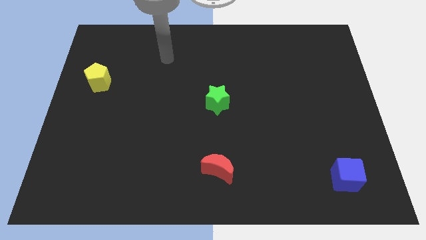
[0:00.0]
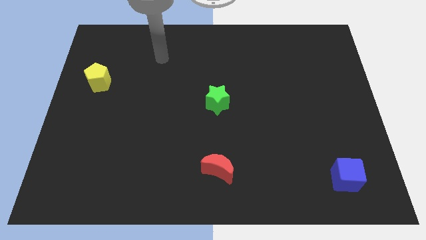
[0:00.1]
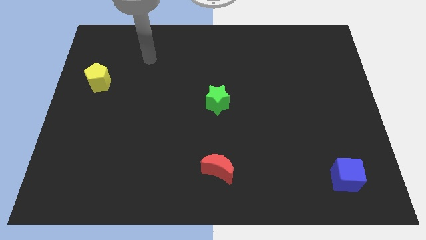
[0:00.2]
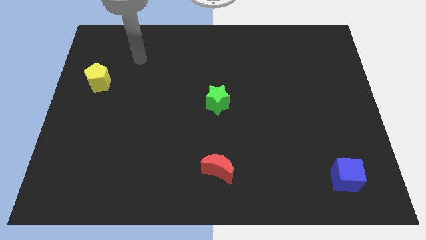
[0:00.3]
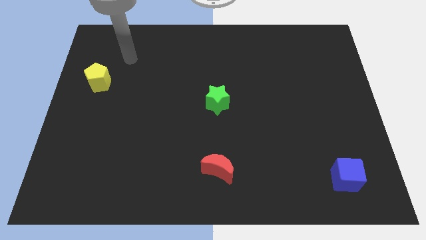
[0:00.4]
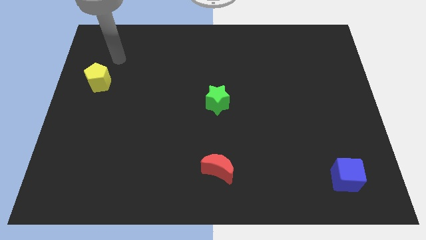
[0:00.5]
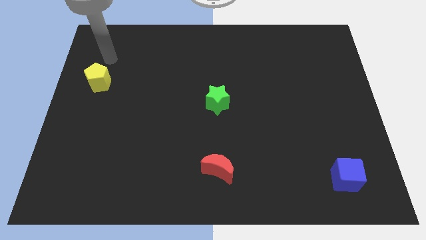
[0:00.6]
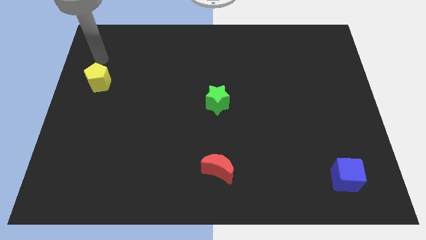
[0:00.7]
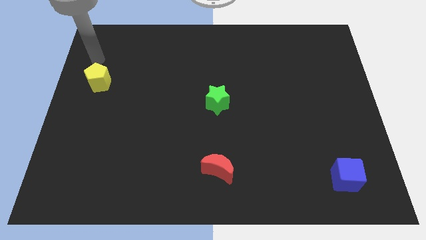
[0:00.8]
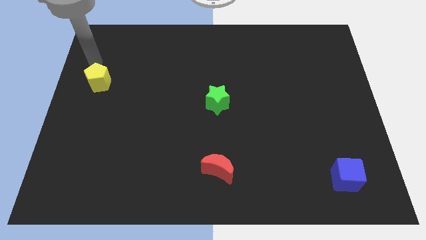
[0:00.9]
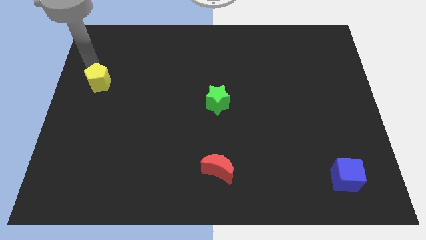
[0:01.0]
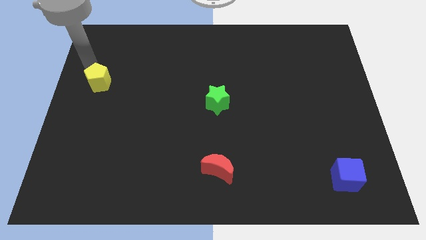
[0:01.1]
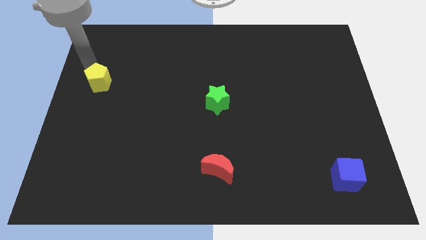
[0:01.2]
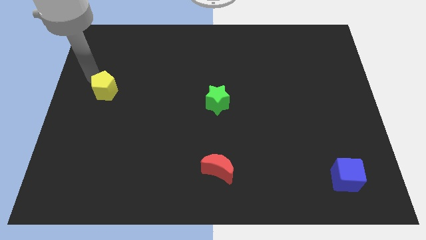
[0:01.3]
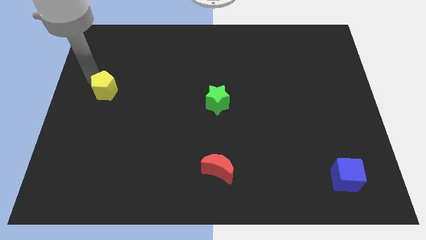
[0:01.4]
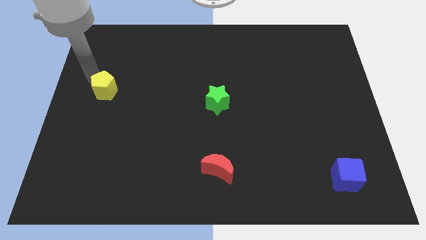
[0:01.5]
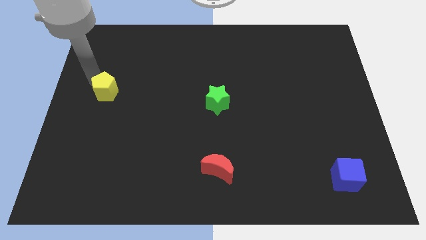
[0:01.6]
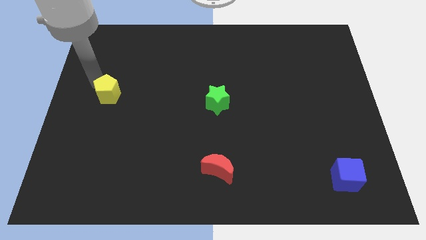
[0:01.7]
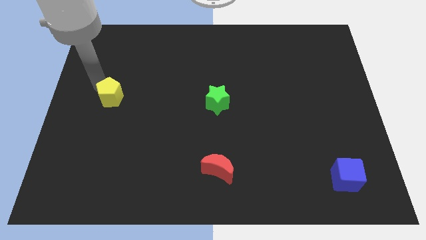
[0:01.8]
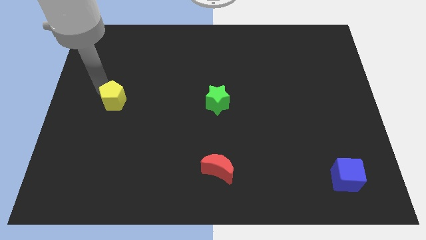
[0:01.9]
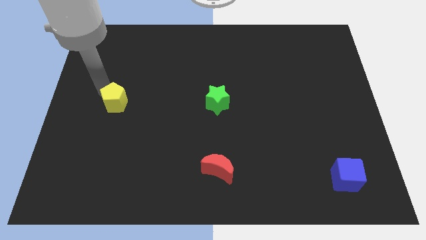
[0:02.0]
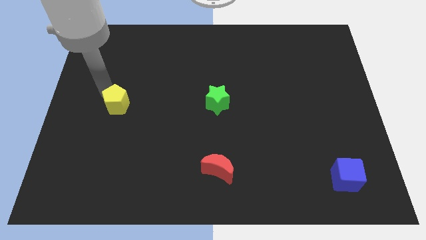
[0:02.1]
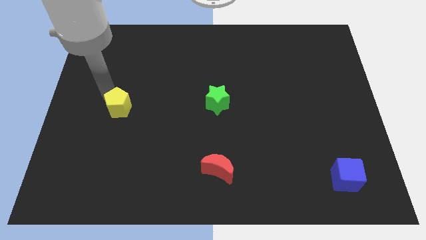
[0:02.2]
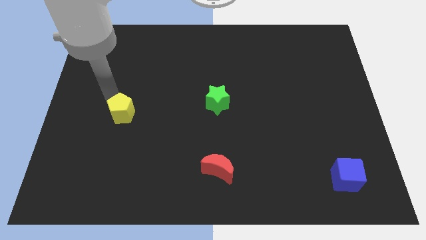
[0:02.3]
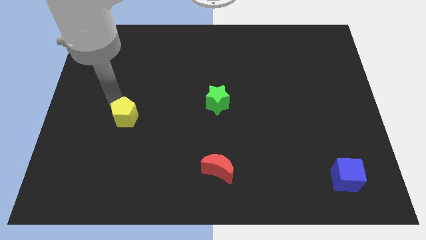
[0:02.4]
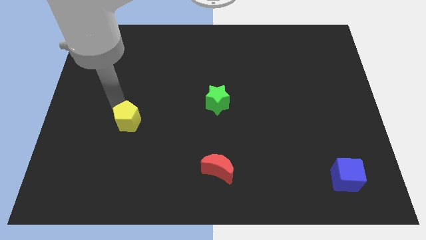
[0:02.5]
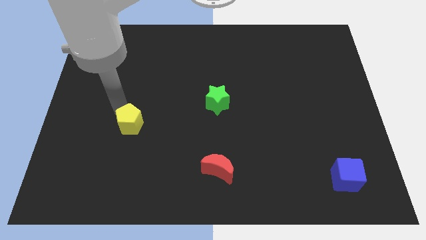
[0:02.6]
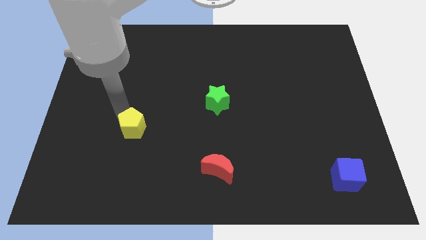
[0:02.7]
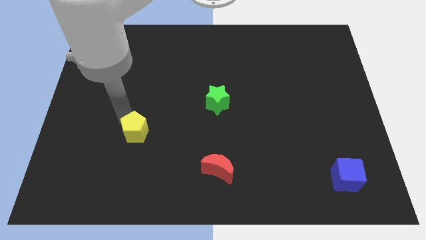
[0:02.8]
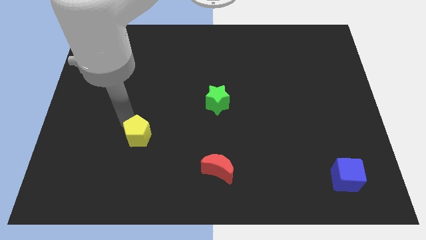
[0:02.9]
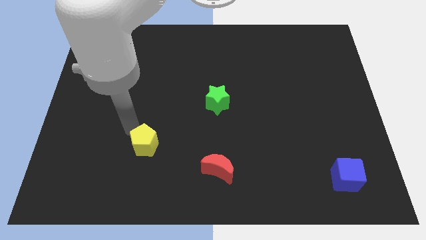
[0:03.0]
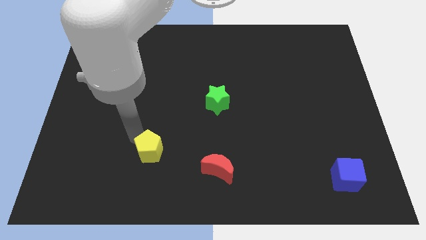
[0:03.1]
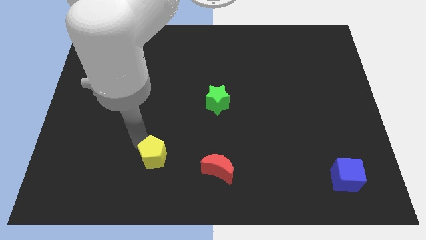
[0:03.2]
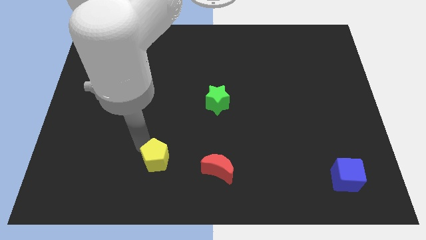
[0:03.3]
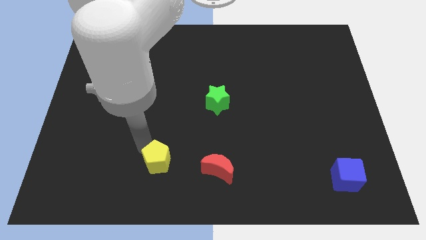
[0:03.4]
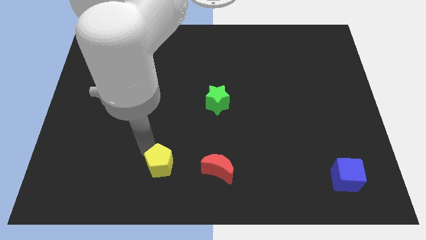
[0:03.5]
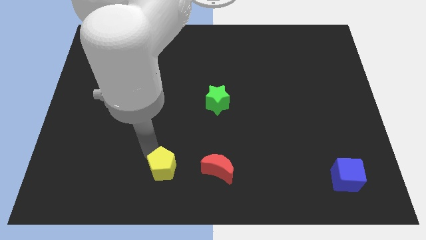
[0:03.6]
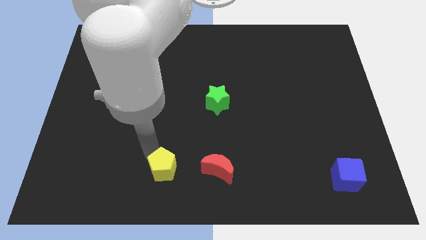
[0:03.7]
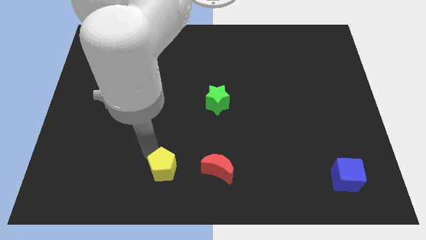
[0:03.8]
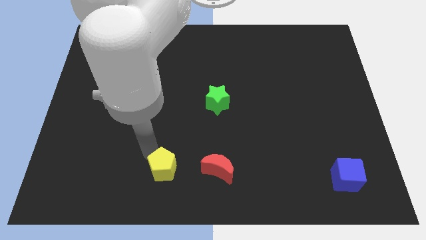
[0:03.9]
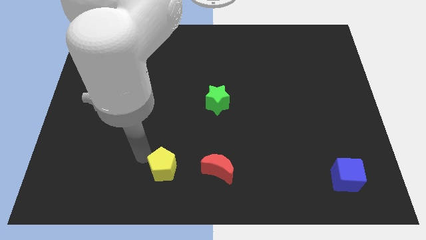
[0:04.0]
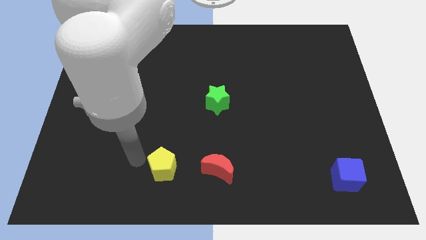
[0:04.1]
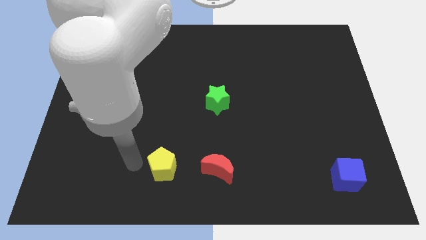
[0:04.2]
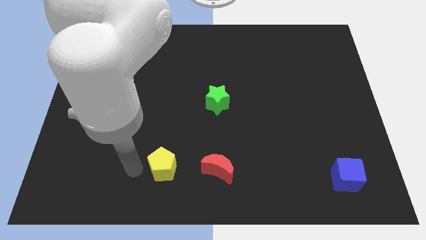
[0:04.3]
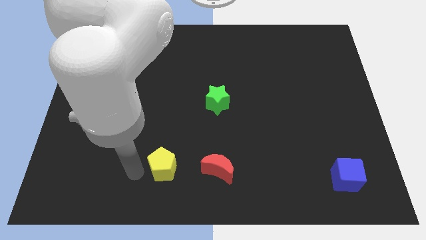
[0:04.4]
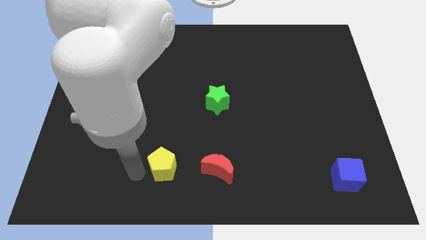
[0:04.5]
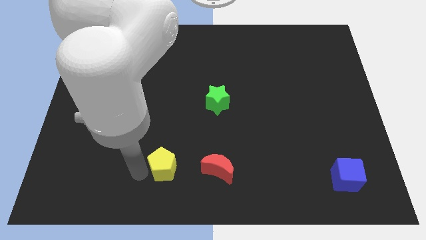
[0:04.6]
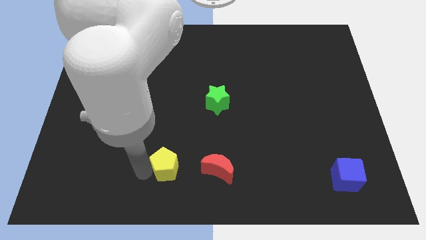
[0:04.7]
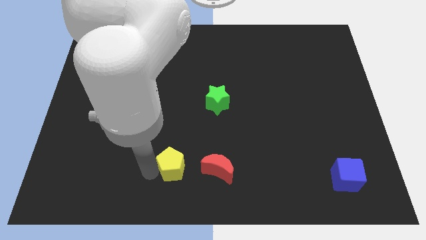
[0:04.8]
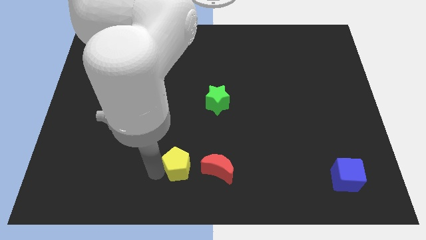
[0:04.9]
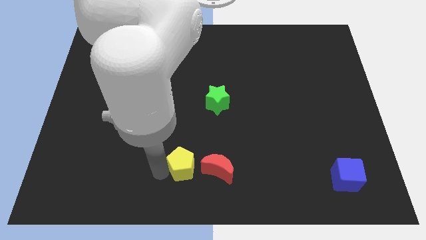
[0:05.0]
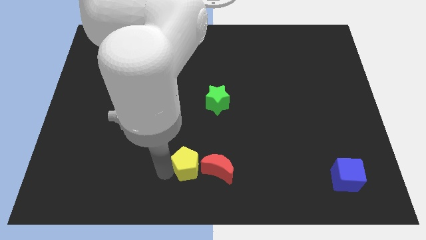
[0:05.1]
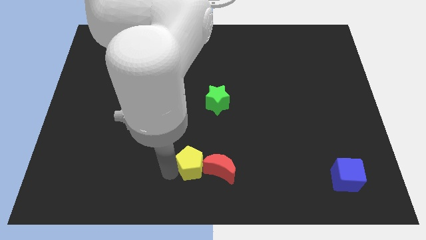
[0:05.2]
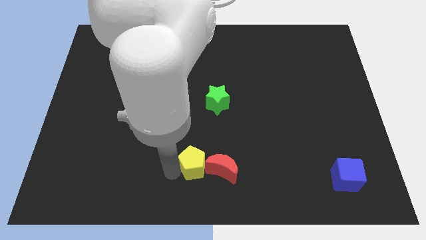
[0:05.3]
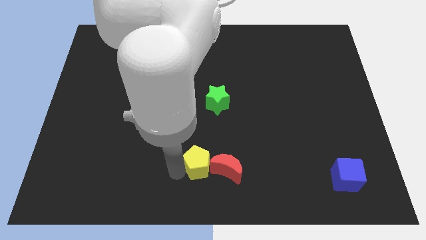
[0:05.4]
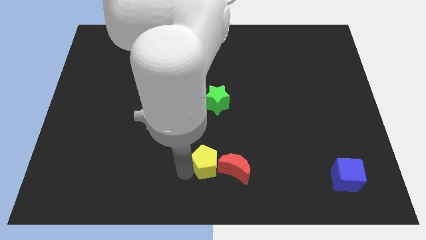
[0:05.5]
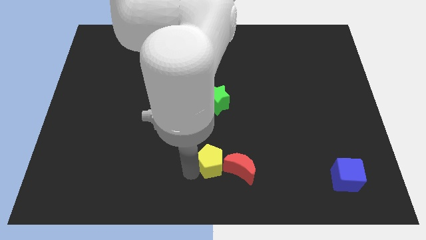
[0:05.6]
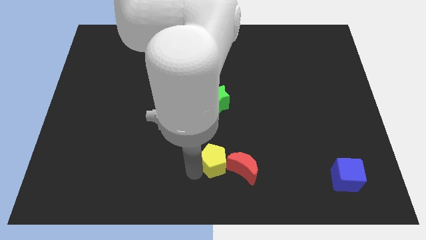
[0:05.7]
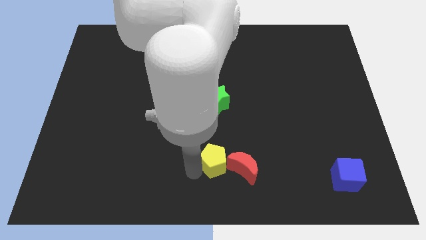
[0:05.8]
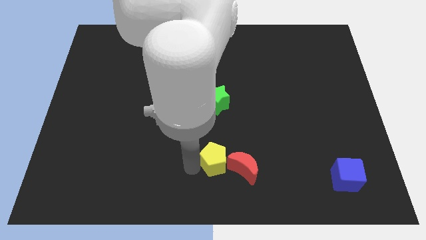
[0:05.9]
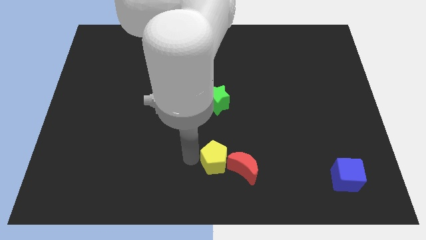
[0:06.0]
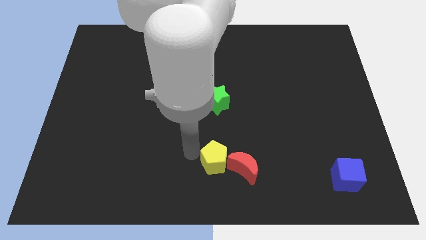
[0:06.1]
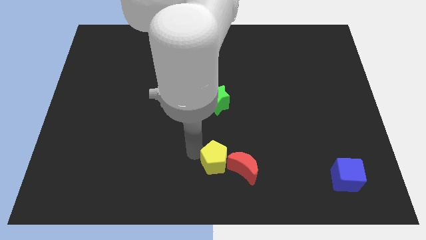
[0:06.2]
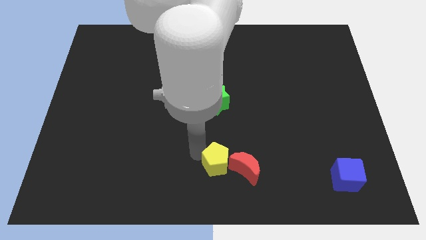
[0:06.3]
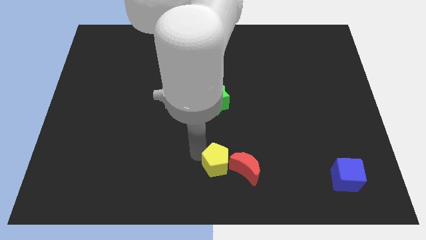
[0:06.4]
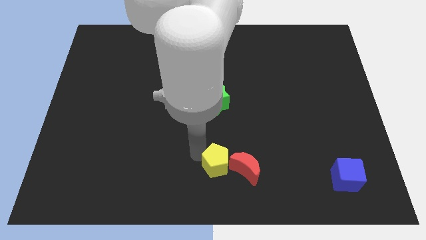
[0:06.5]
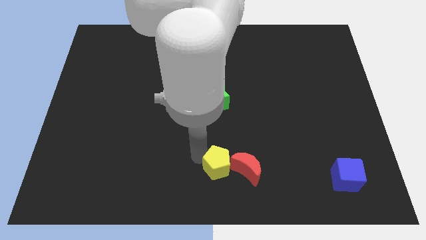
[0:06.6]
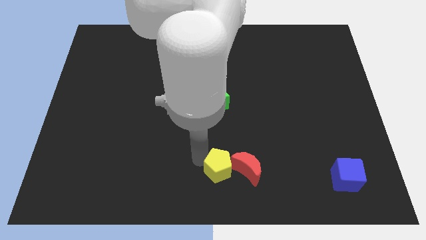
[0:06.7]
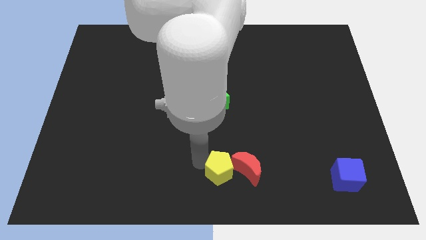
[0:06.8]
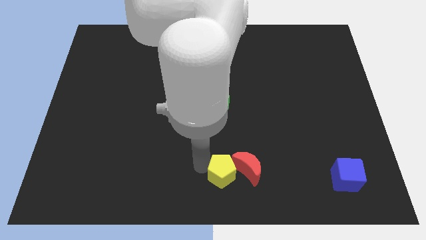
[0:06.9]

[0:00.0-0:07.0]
put the yellow pentagon towards the moon

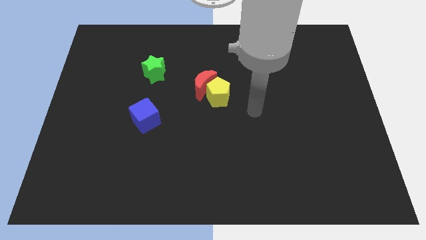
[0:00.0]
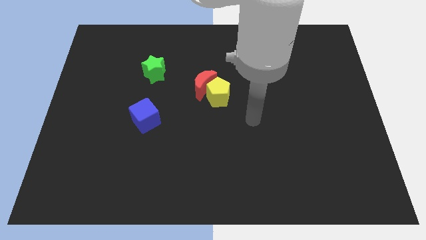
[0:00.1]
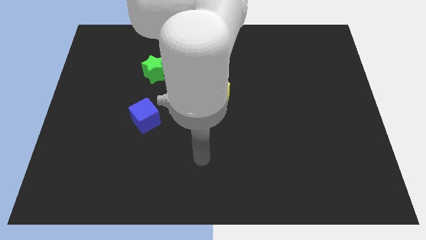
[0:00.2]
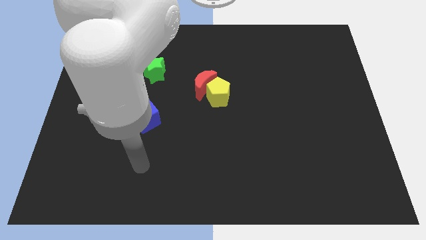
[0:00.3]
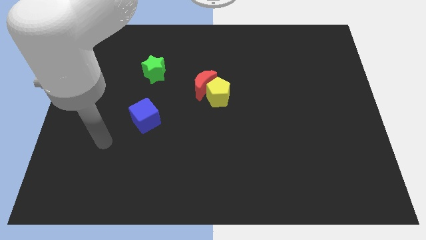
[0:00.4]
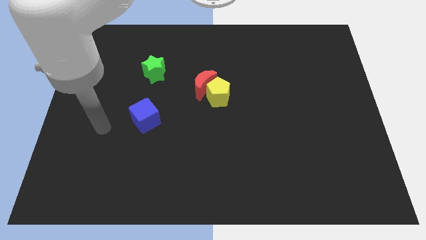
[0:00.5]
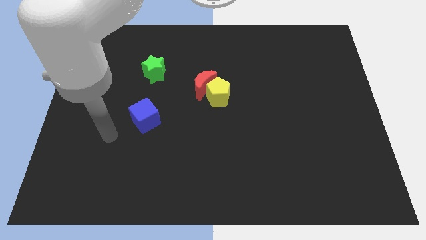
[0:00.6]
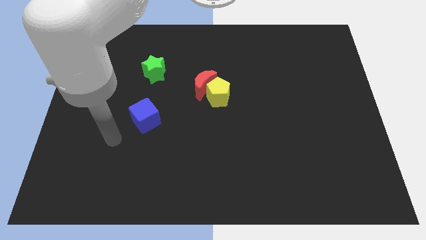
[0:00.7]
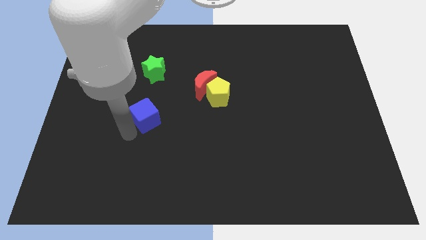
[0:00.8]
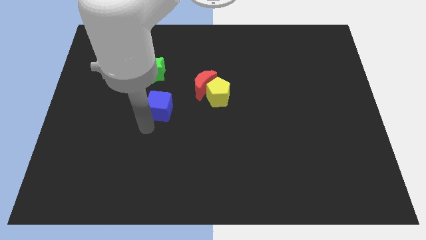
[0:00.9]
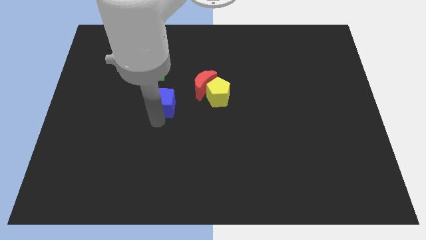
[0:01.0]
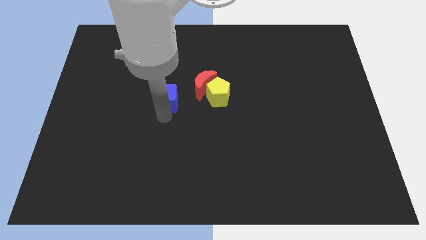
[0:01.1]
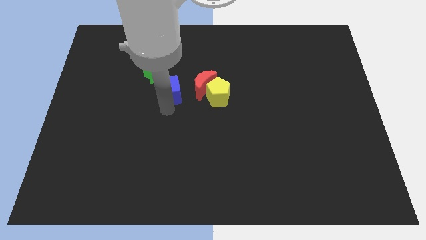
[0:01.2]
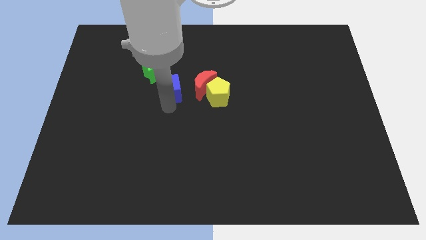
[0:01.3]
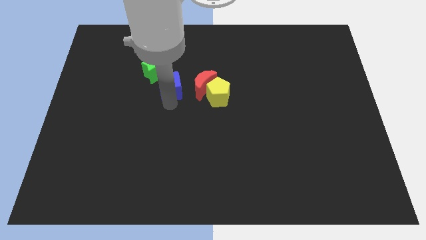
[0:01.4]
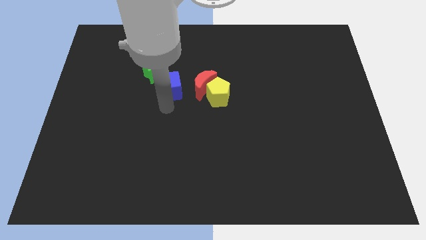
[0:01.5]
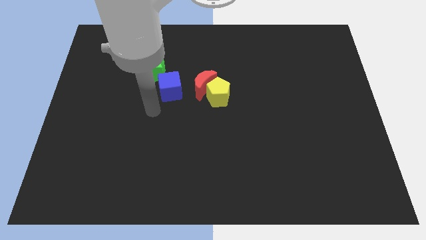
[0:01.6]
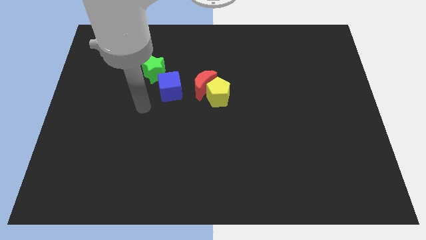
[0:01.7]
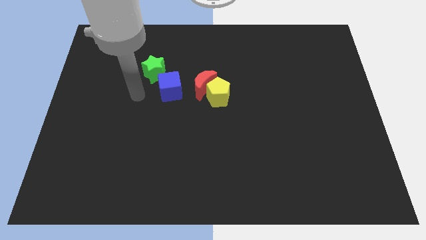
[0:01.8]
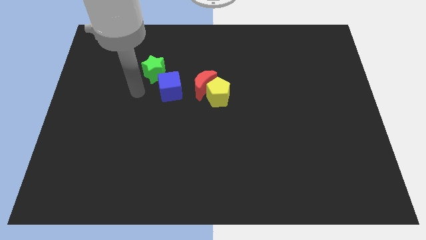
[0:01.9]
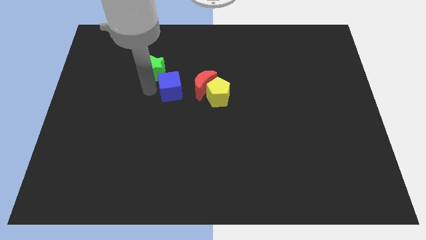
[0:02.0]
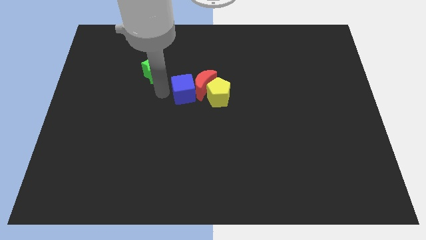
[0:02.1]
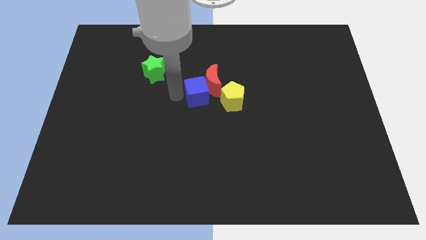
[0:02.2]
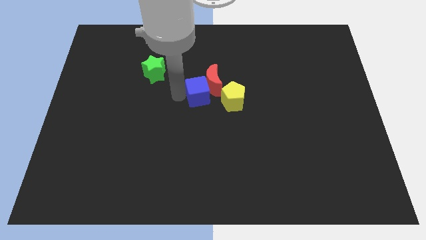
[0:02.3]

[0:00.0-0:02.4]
put the blue cube next to the red moon
